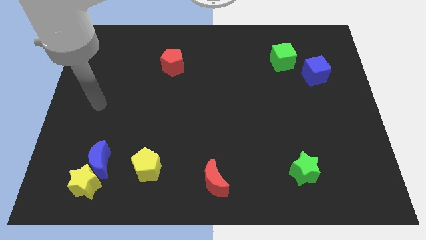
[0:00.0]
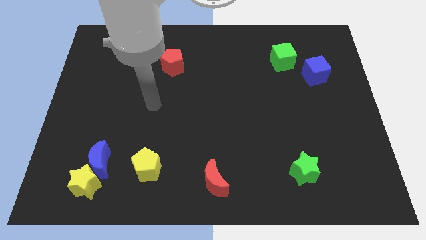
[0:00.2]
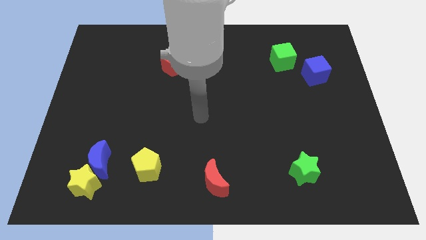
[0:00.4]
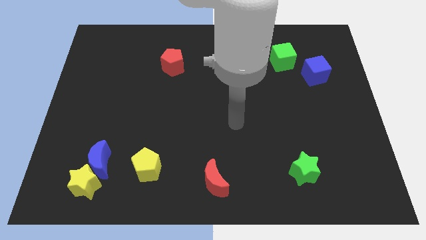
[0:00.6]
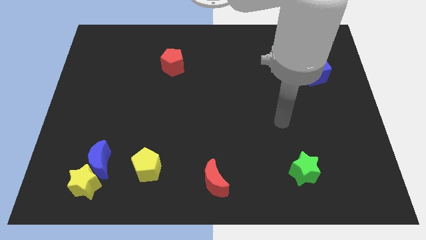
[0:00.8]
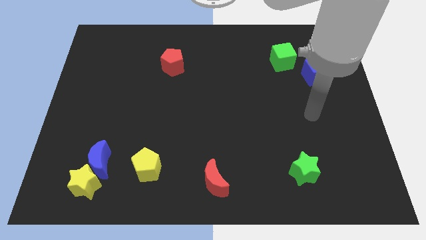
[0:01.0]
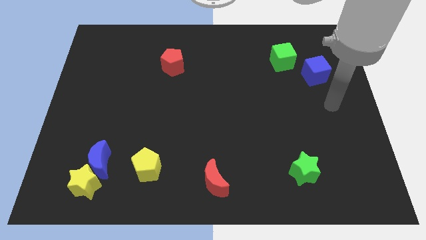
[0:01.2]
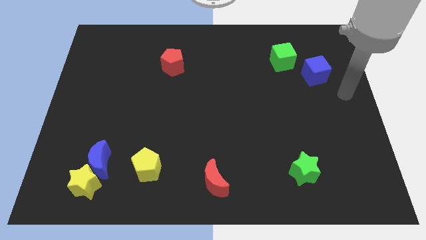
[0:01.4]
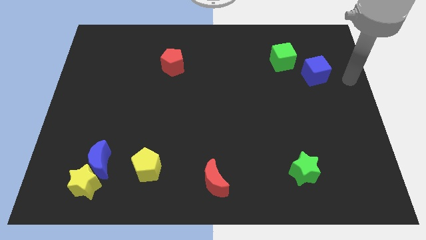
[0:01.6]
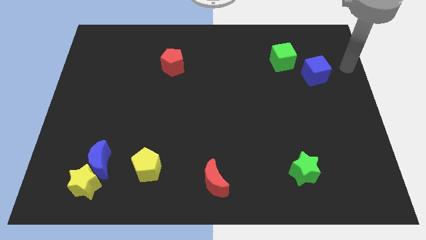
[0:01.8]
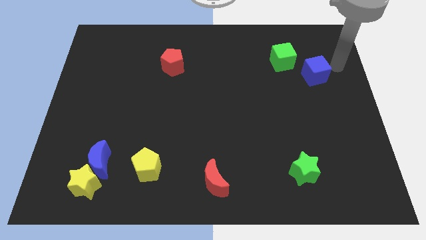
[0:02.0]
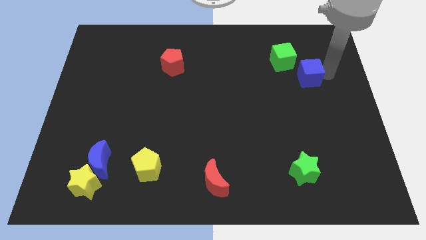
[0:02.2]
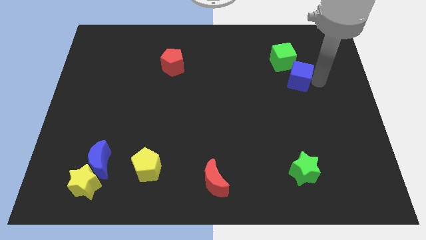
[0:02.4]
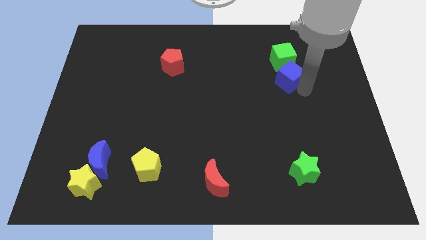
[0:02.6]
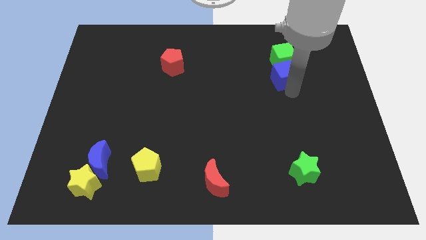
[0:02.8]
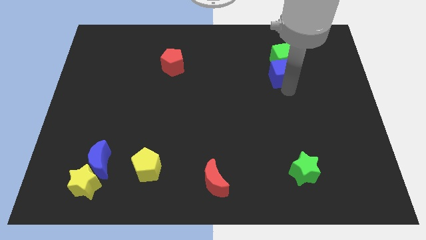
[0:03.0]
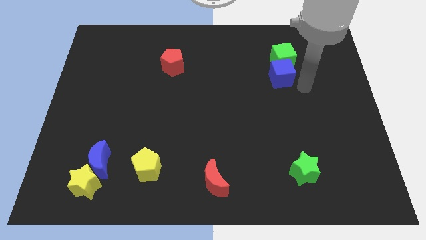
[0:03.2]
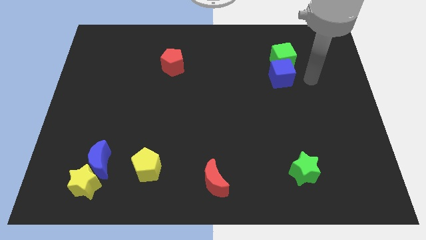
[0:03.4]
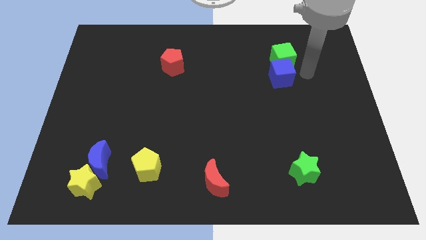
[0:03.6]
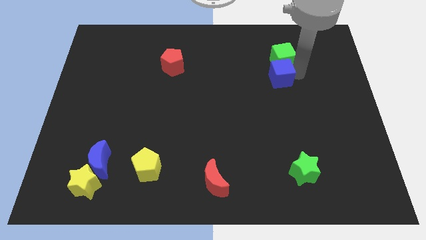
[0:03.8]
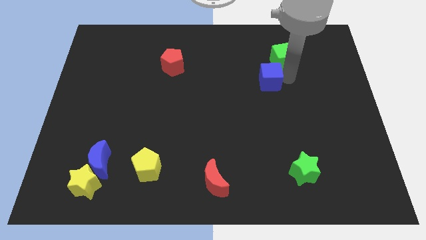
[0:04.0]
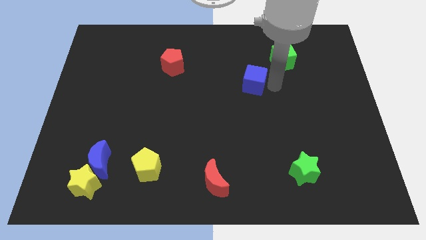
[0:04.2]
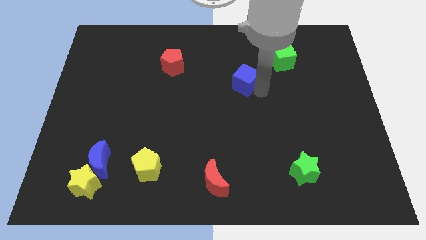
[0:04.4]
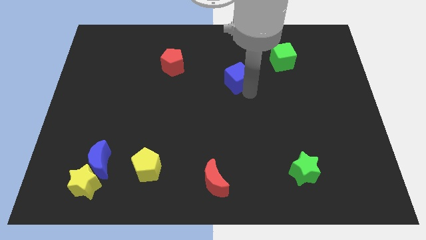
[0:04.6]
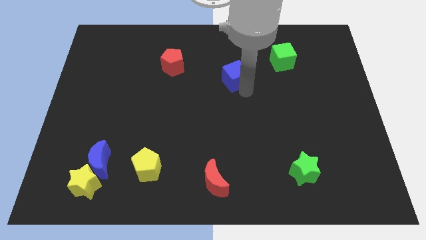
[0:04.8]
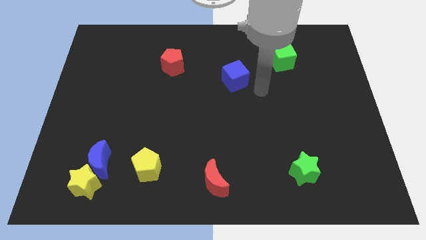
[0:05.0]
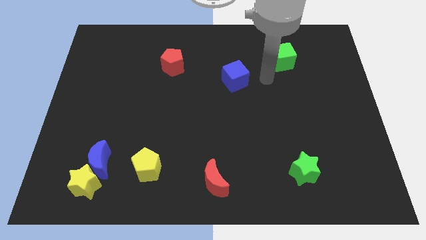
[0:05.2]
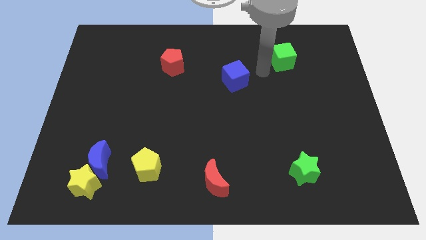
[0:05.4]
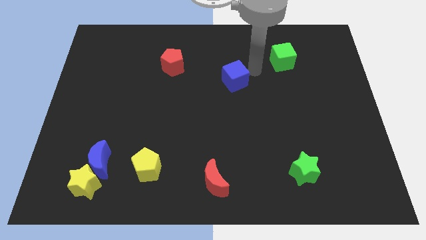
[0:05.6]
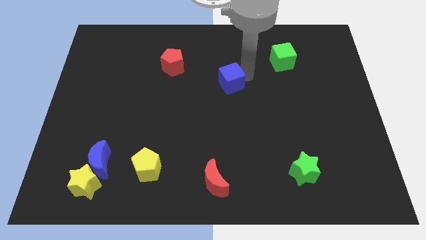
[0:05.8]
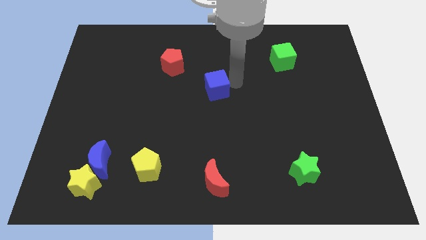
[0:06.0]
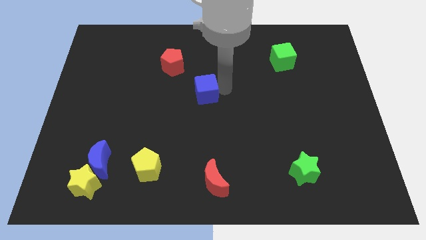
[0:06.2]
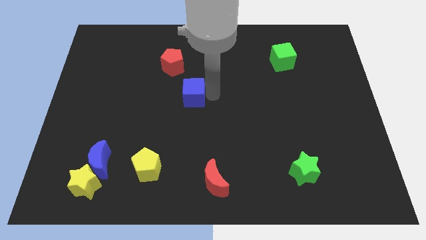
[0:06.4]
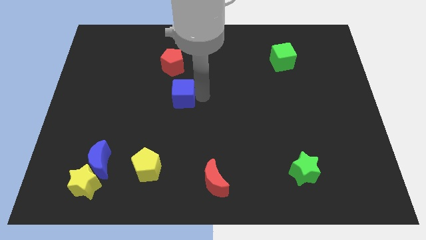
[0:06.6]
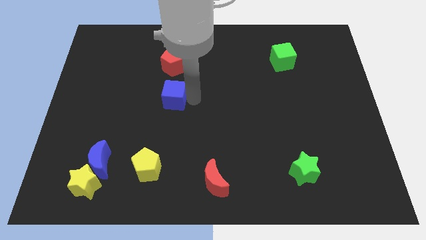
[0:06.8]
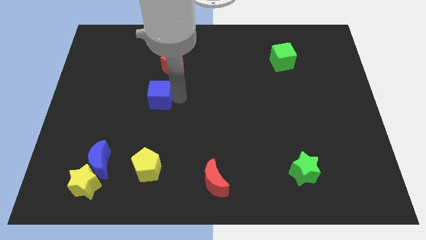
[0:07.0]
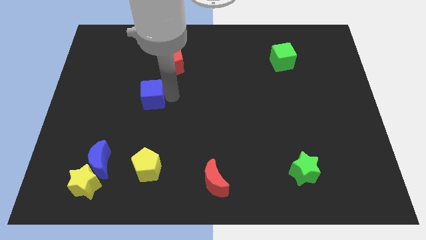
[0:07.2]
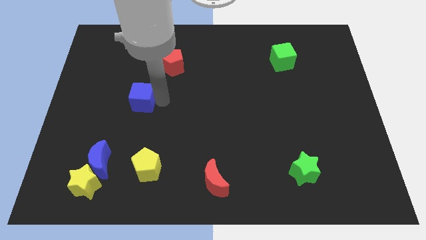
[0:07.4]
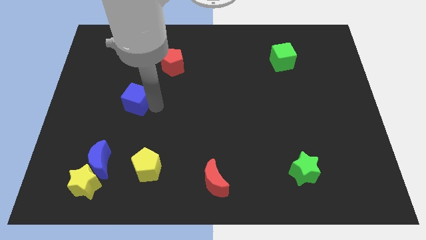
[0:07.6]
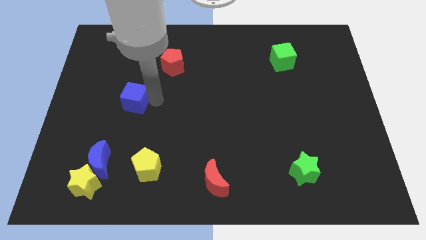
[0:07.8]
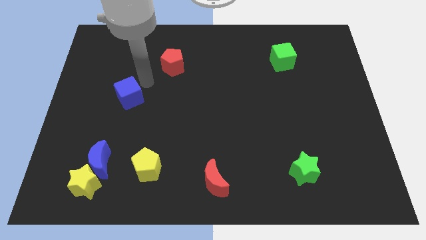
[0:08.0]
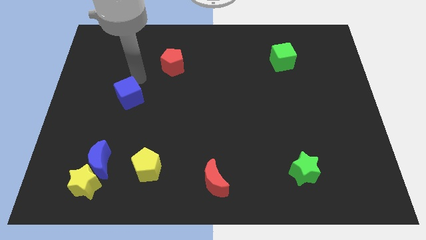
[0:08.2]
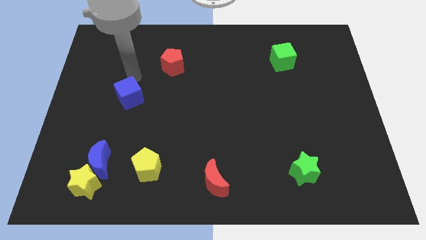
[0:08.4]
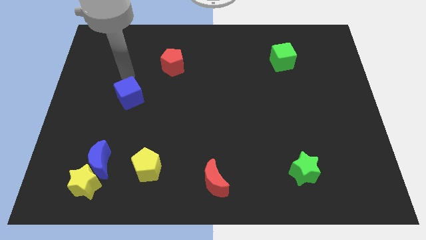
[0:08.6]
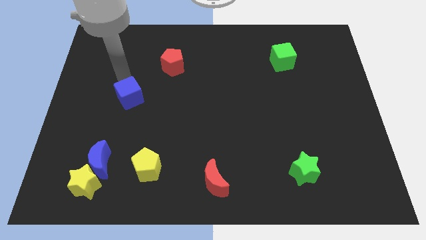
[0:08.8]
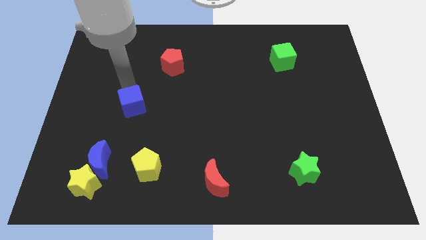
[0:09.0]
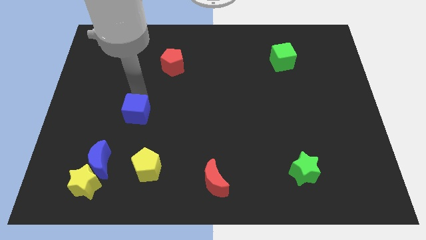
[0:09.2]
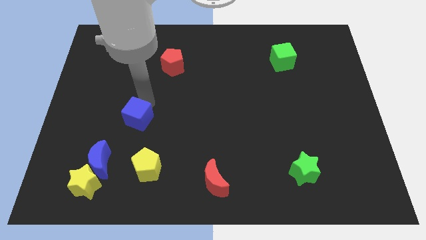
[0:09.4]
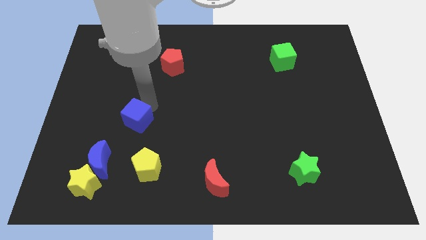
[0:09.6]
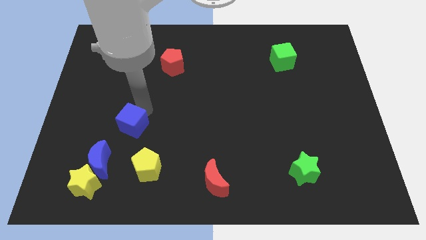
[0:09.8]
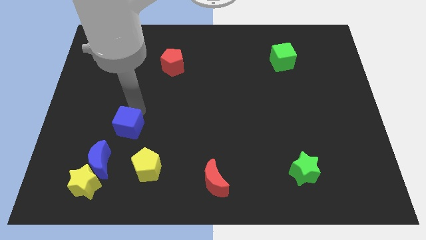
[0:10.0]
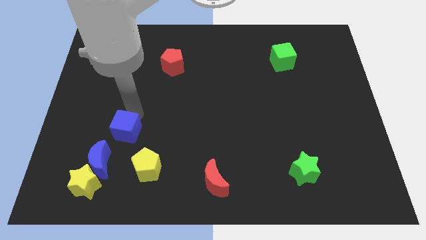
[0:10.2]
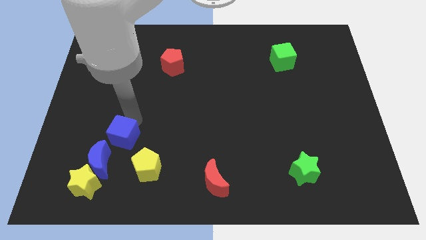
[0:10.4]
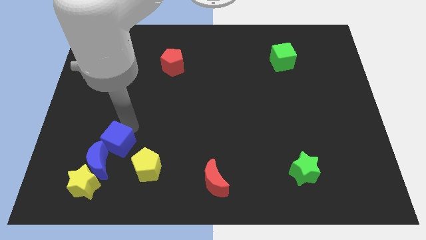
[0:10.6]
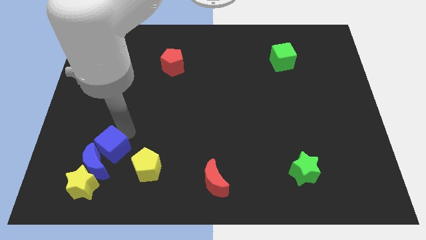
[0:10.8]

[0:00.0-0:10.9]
put the blue cube to the blue moon

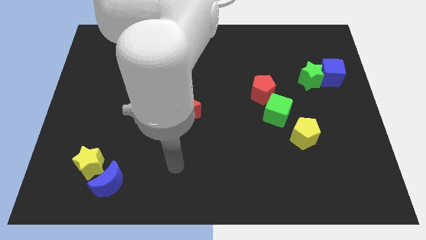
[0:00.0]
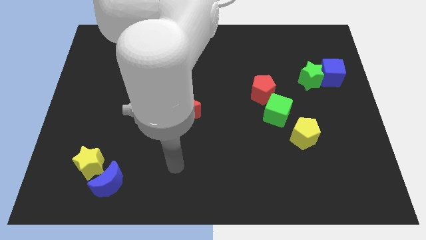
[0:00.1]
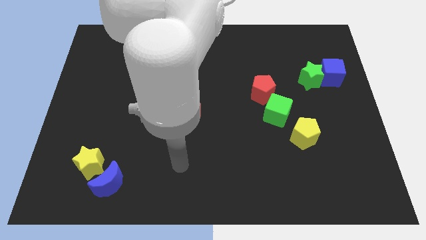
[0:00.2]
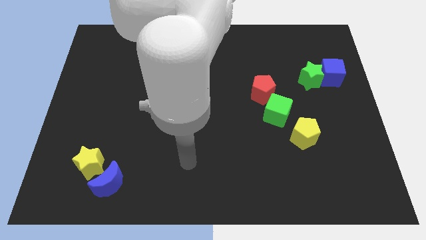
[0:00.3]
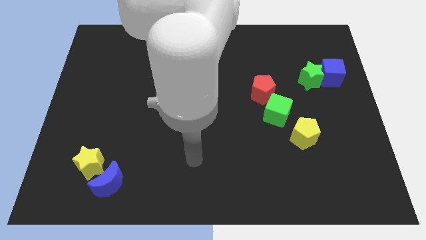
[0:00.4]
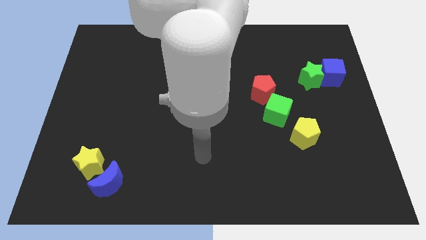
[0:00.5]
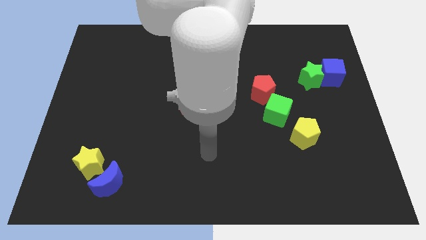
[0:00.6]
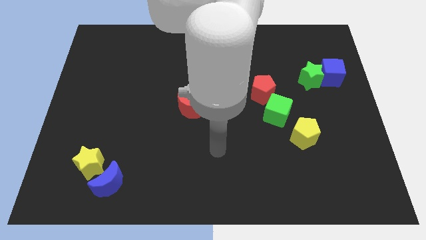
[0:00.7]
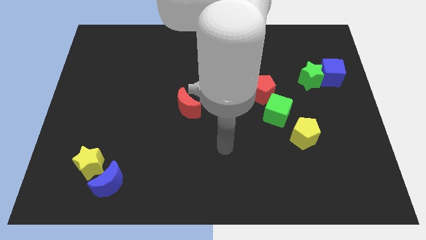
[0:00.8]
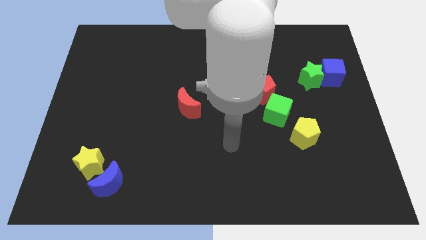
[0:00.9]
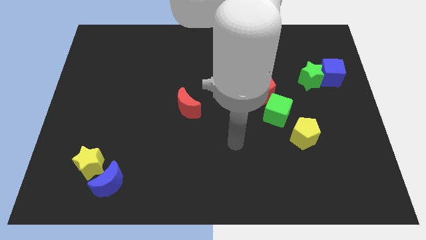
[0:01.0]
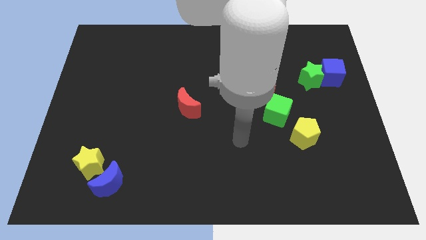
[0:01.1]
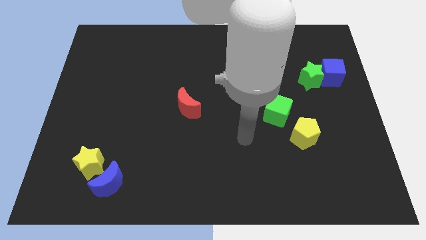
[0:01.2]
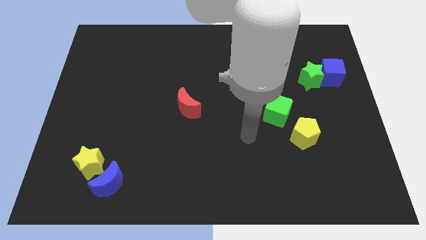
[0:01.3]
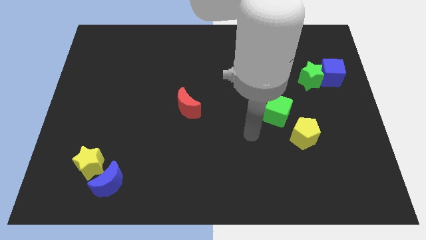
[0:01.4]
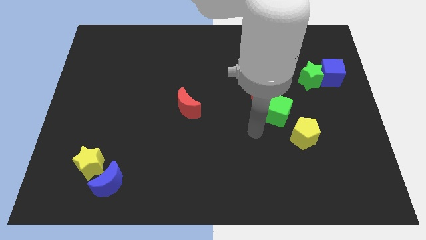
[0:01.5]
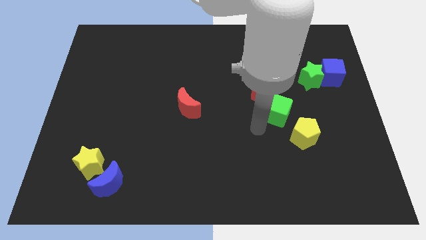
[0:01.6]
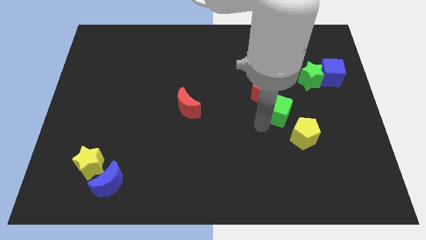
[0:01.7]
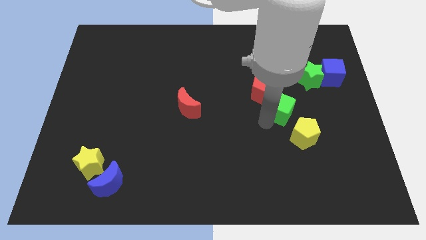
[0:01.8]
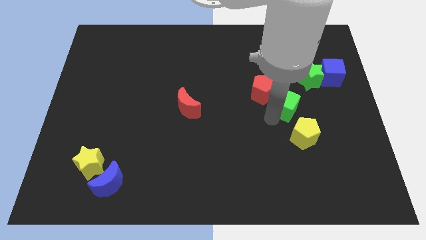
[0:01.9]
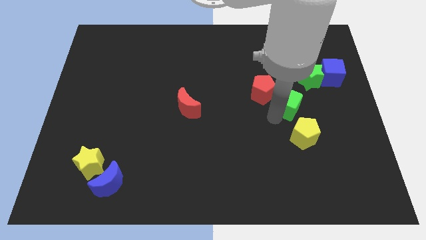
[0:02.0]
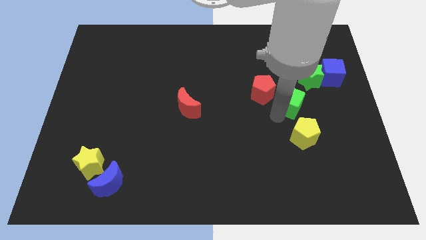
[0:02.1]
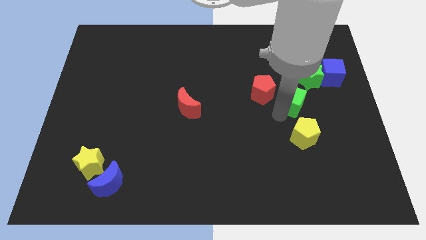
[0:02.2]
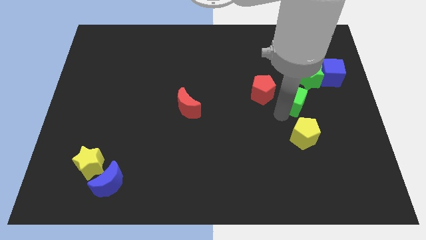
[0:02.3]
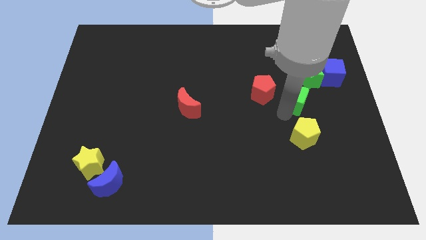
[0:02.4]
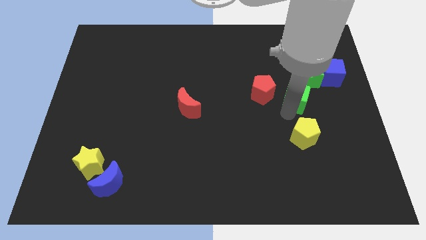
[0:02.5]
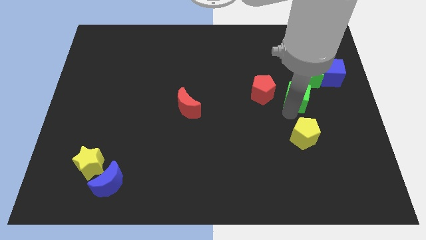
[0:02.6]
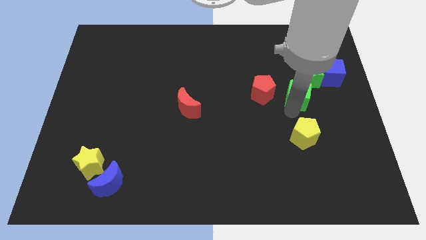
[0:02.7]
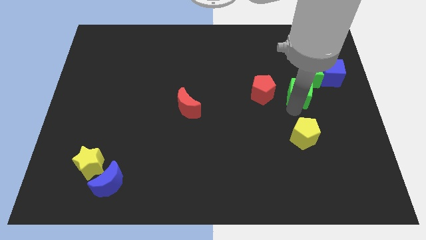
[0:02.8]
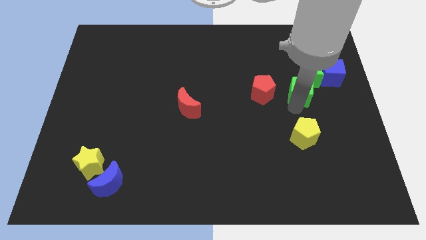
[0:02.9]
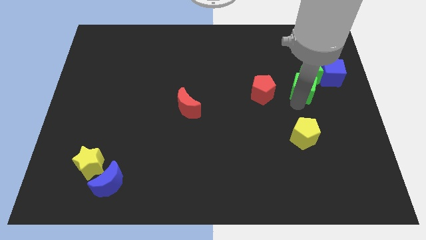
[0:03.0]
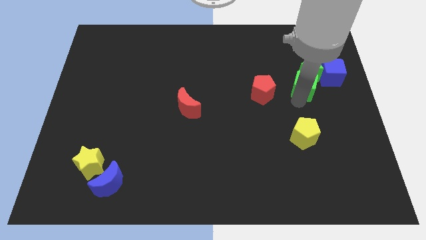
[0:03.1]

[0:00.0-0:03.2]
put the green cube next to the green star
